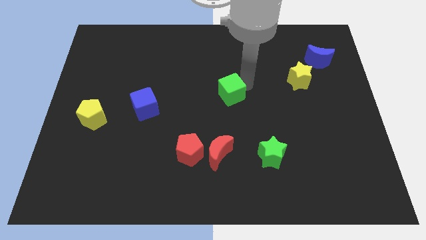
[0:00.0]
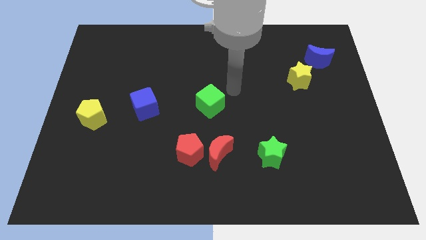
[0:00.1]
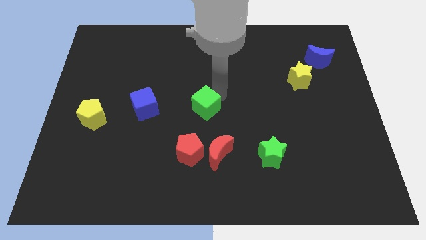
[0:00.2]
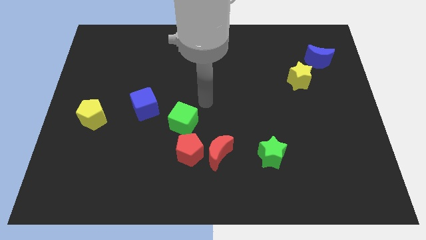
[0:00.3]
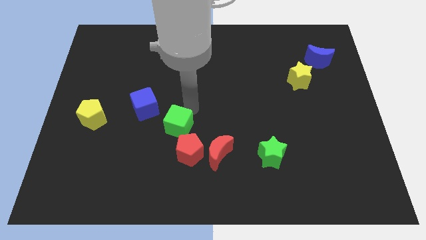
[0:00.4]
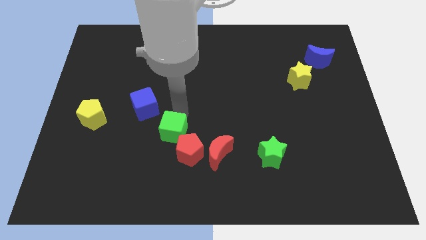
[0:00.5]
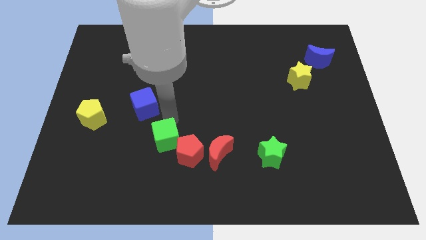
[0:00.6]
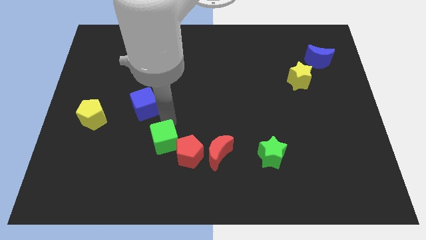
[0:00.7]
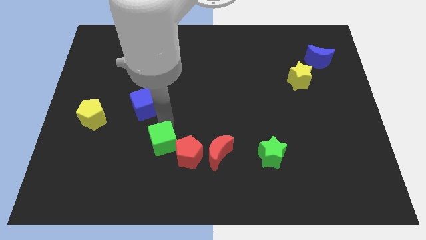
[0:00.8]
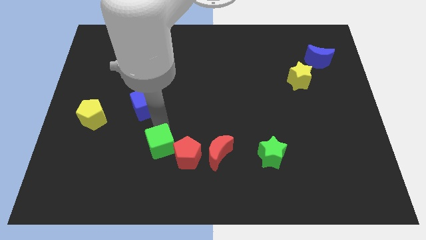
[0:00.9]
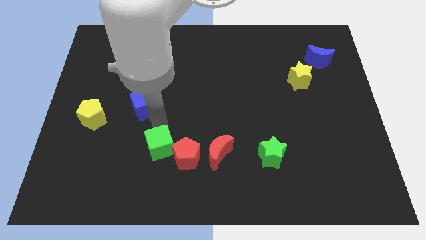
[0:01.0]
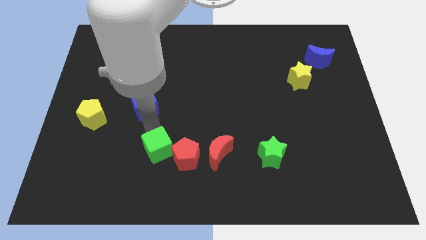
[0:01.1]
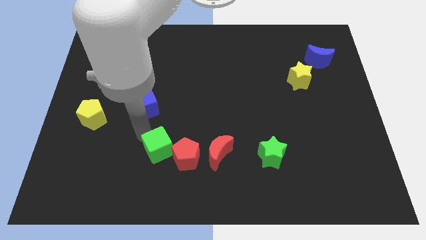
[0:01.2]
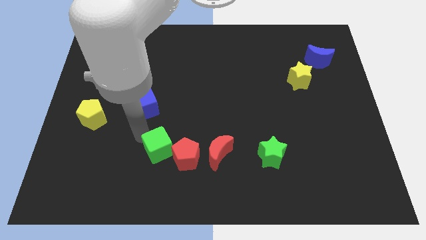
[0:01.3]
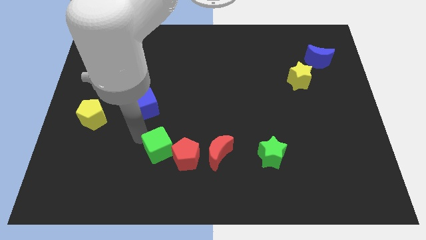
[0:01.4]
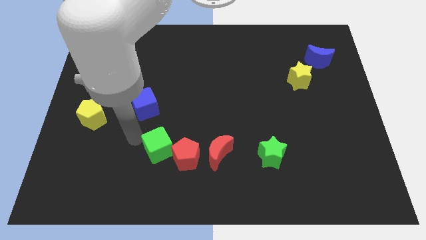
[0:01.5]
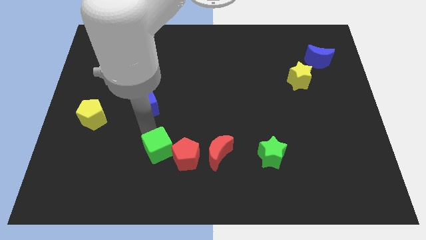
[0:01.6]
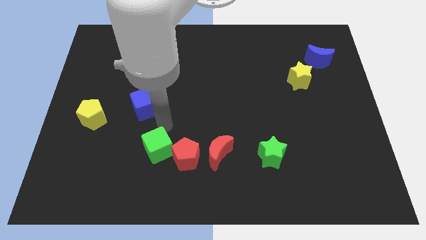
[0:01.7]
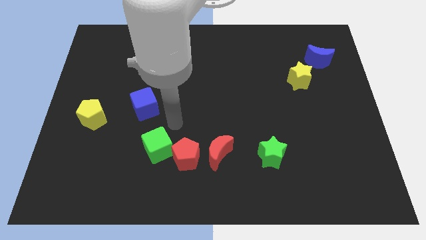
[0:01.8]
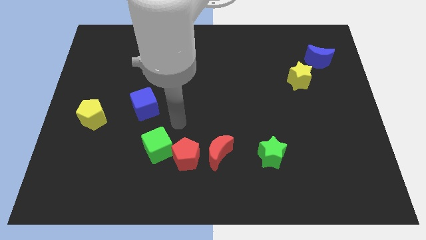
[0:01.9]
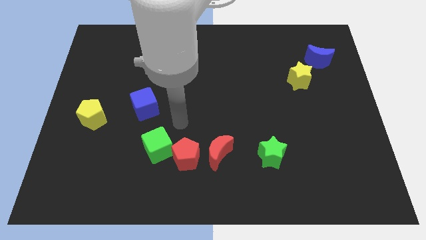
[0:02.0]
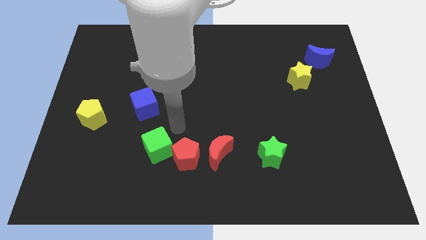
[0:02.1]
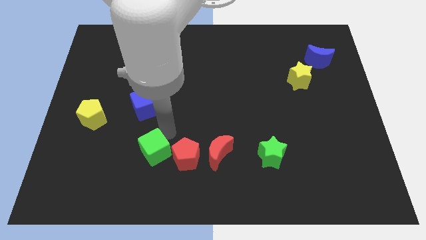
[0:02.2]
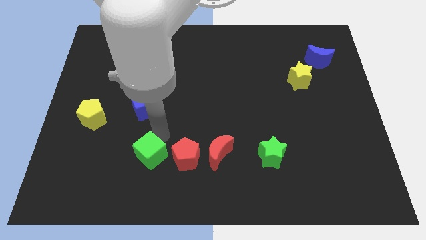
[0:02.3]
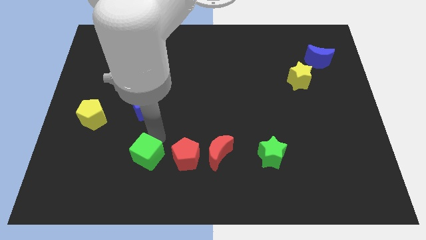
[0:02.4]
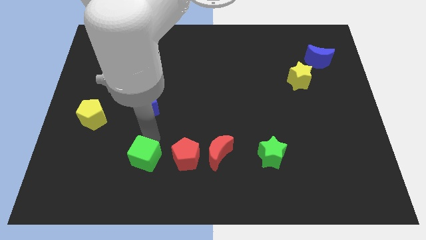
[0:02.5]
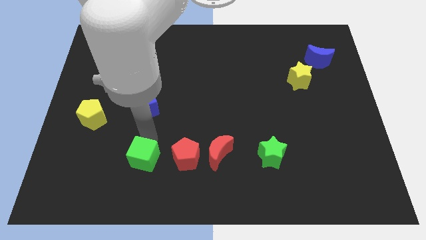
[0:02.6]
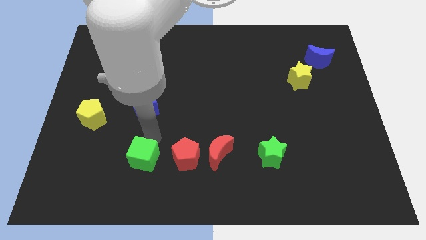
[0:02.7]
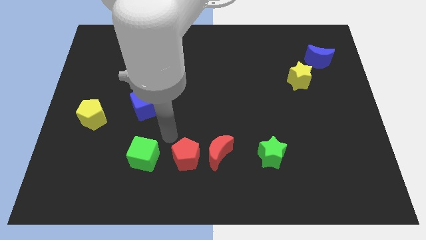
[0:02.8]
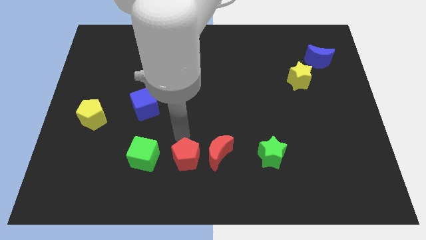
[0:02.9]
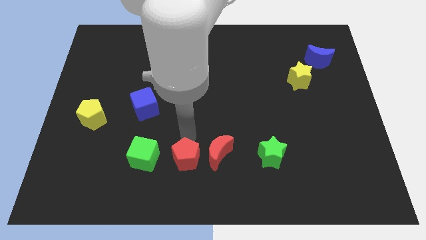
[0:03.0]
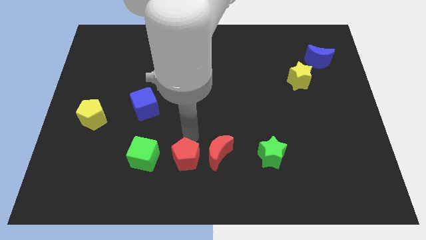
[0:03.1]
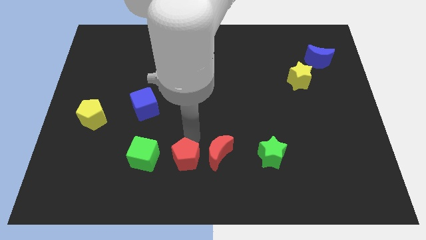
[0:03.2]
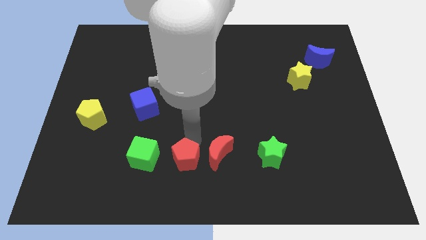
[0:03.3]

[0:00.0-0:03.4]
push the green cube to the left side of the red pentagon

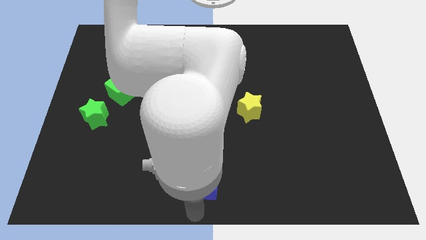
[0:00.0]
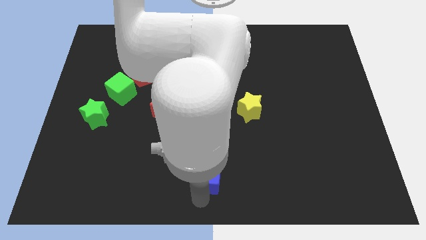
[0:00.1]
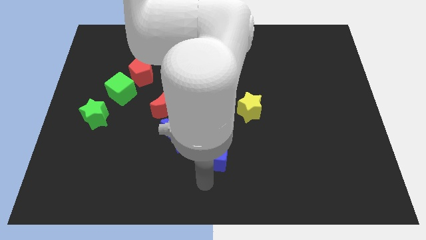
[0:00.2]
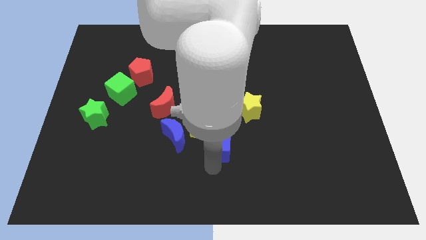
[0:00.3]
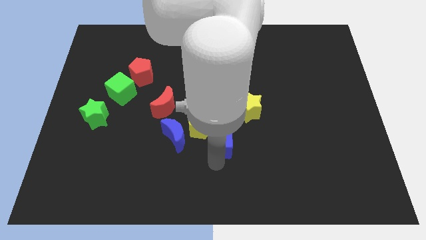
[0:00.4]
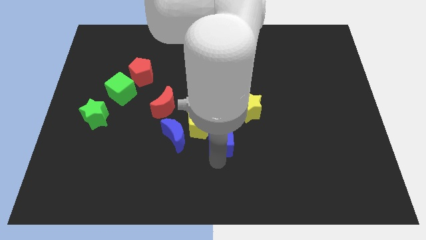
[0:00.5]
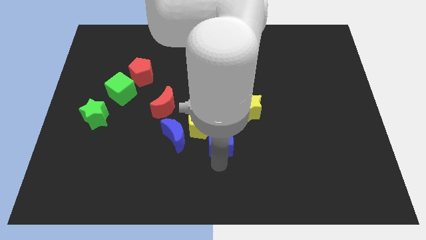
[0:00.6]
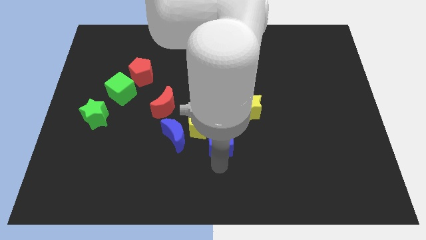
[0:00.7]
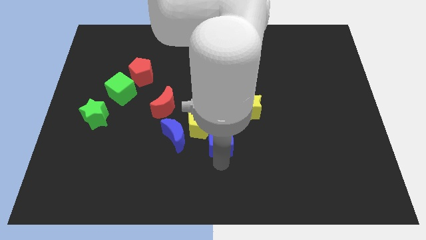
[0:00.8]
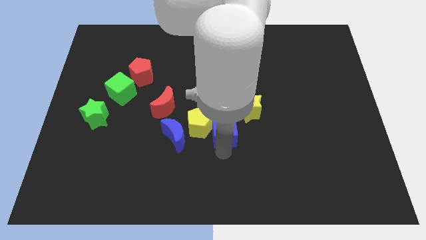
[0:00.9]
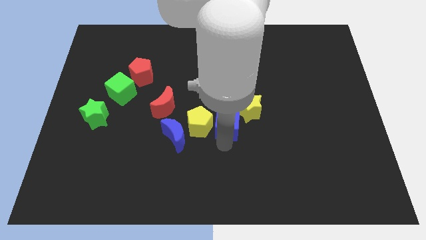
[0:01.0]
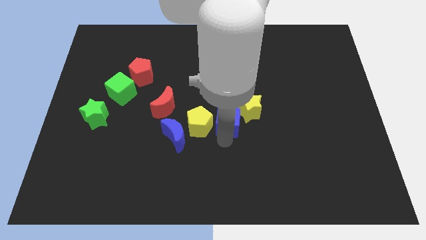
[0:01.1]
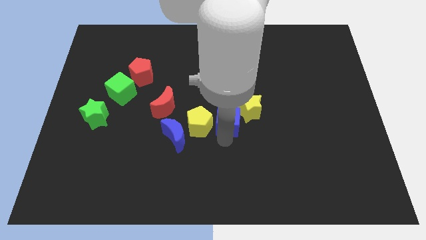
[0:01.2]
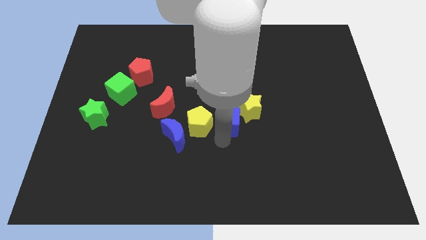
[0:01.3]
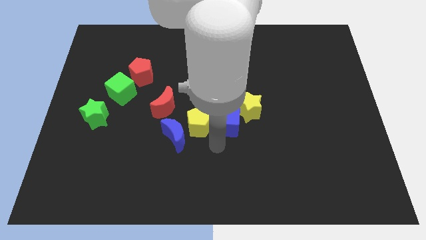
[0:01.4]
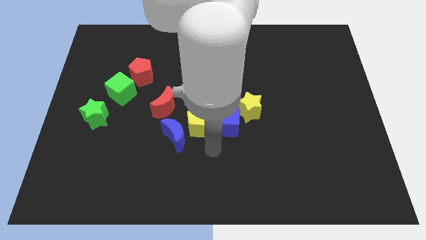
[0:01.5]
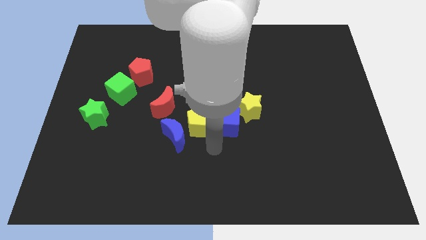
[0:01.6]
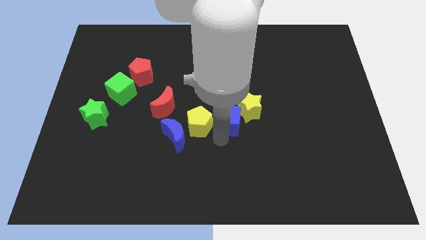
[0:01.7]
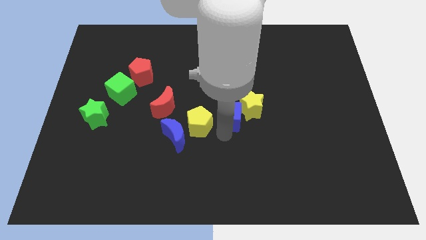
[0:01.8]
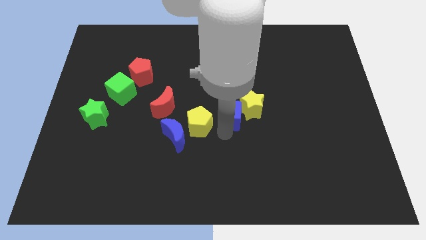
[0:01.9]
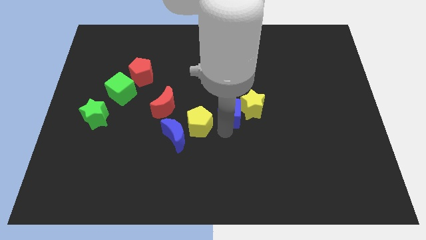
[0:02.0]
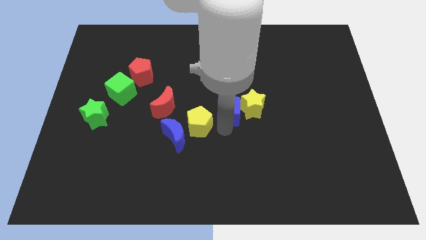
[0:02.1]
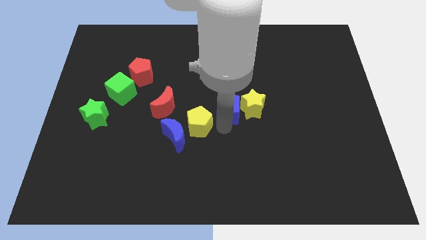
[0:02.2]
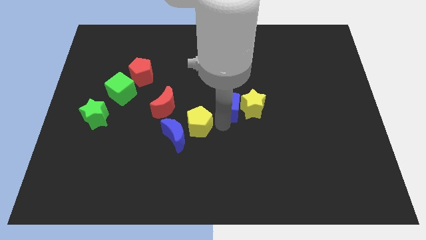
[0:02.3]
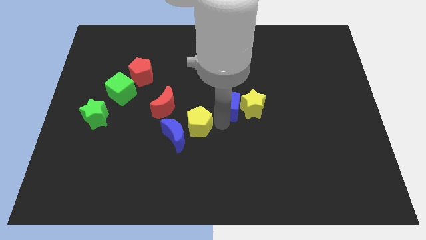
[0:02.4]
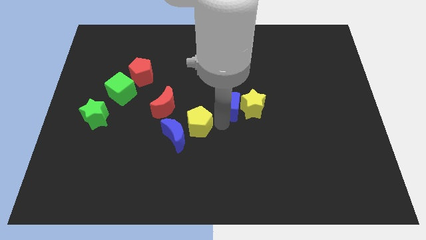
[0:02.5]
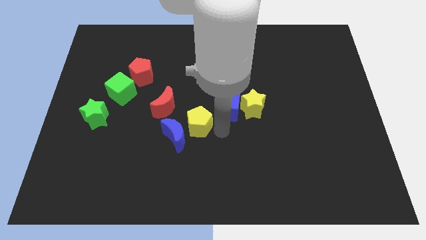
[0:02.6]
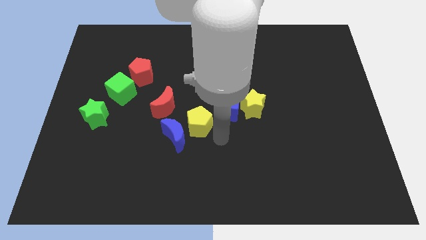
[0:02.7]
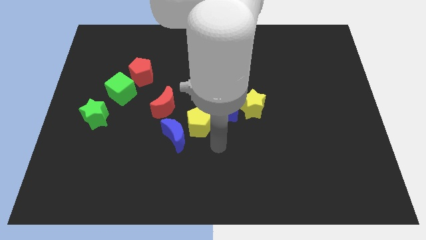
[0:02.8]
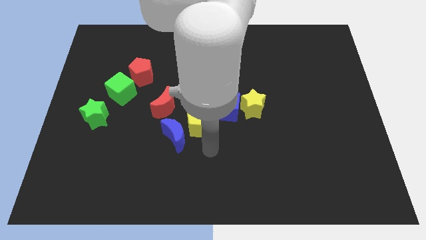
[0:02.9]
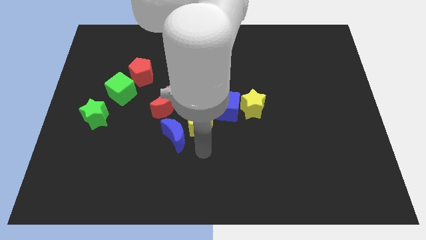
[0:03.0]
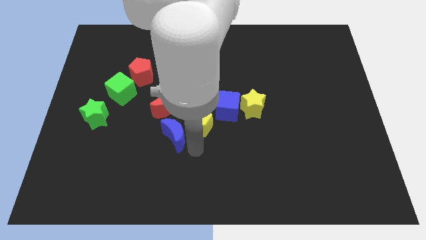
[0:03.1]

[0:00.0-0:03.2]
place blue cube between yellow star and yellow pentagon

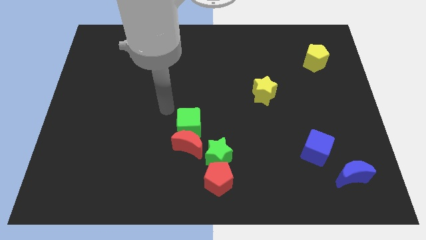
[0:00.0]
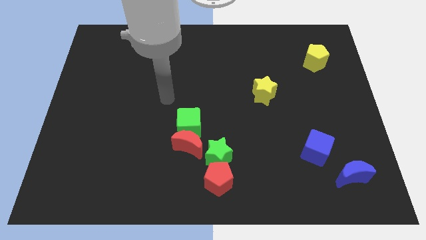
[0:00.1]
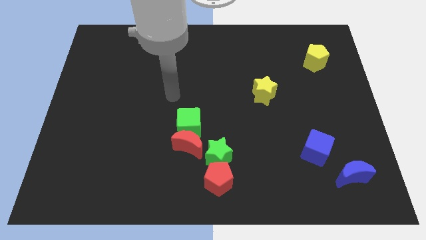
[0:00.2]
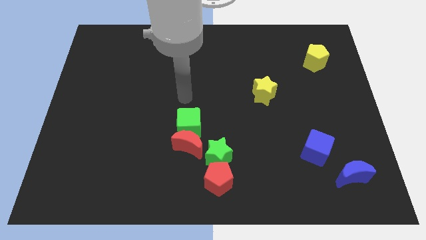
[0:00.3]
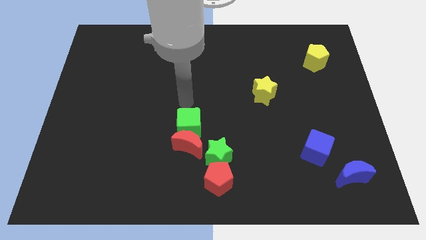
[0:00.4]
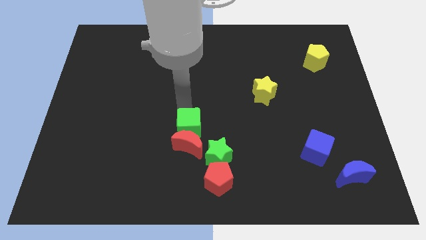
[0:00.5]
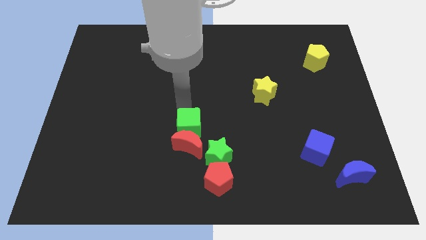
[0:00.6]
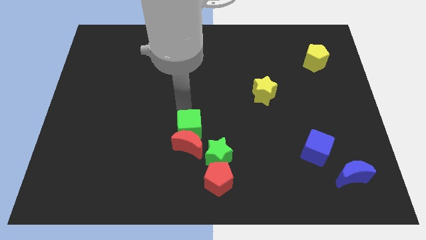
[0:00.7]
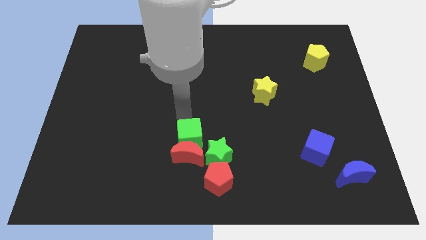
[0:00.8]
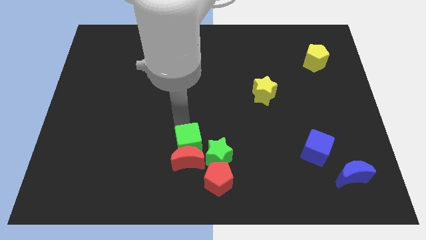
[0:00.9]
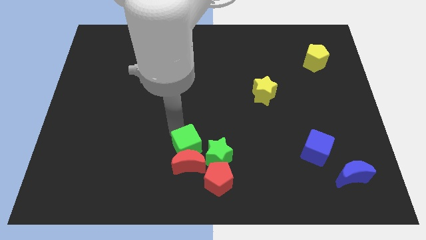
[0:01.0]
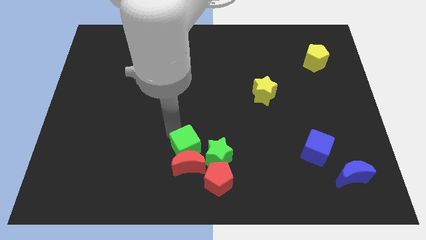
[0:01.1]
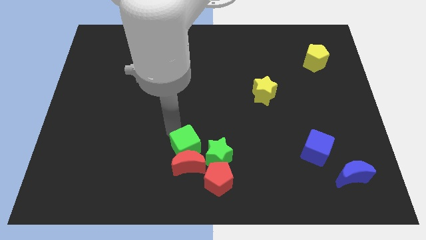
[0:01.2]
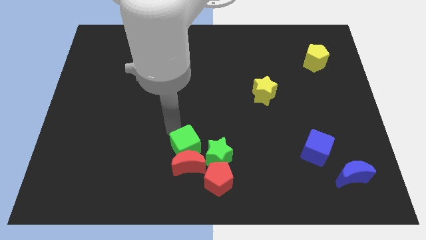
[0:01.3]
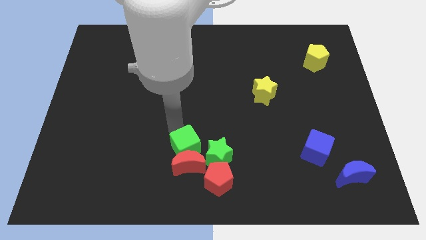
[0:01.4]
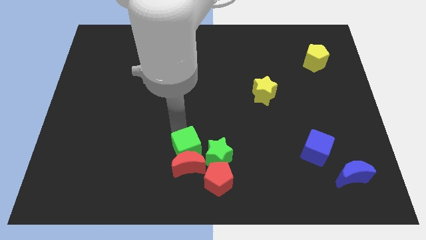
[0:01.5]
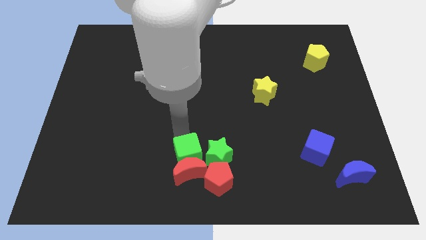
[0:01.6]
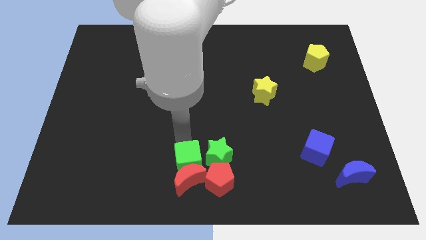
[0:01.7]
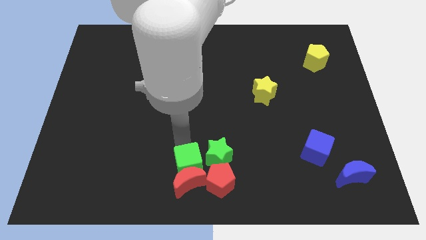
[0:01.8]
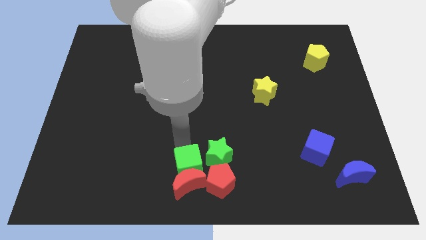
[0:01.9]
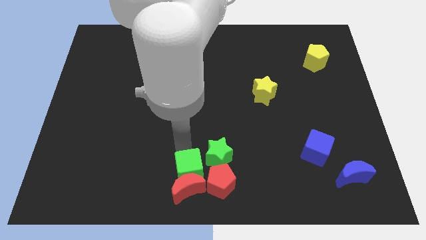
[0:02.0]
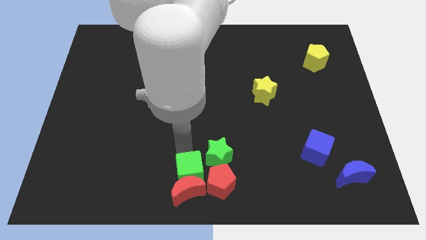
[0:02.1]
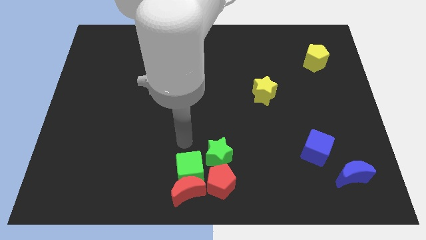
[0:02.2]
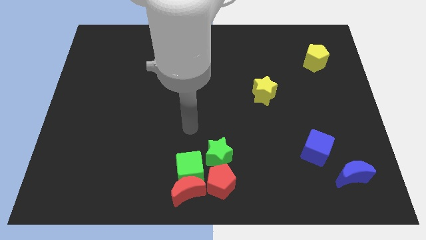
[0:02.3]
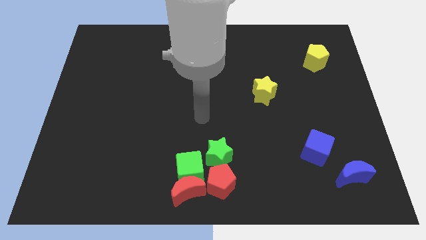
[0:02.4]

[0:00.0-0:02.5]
move the red moon with a green cube towards the bottom center of the board
